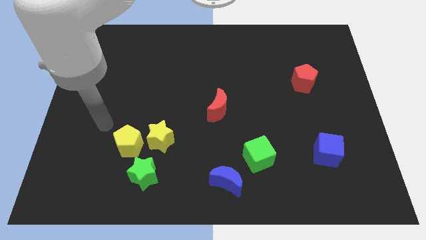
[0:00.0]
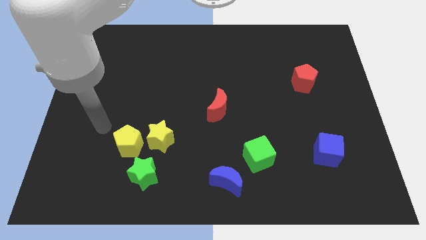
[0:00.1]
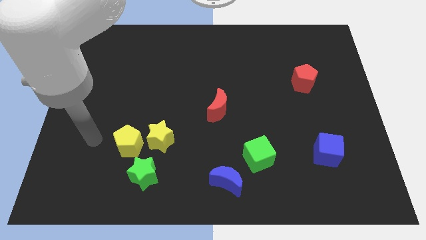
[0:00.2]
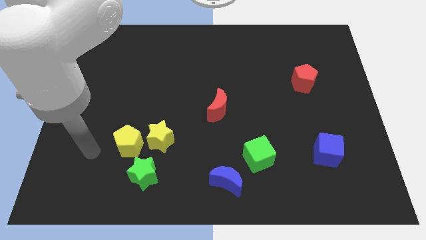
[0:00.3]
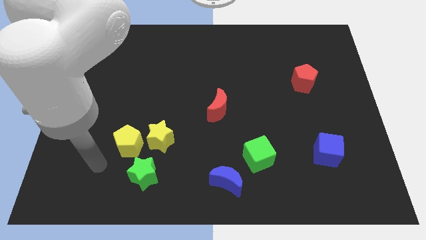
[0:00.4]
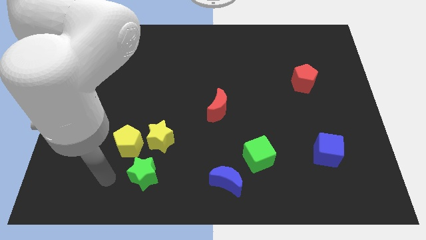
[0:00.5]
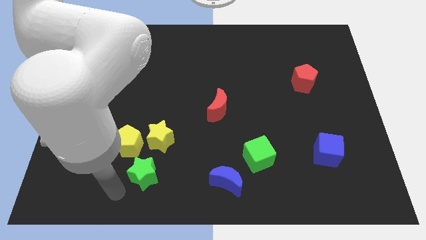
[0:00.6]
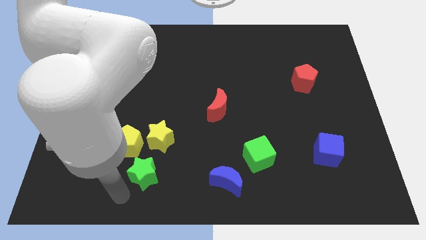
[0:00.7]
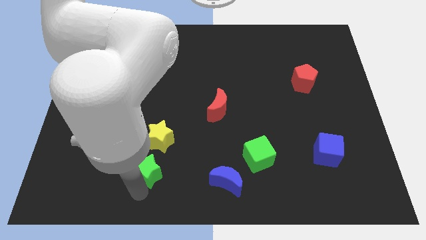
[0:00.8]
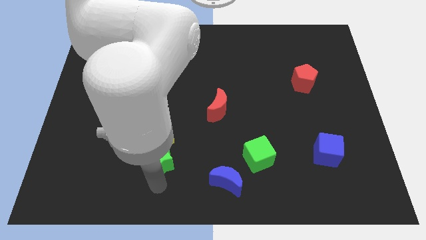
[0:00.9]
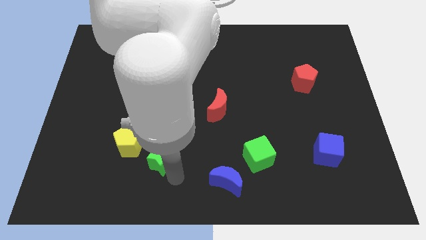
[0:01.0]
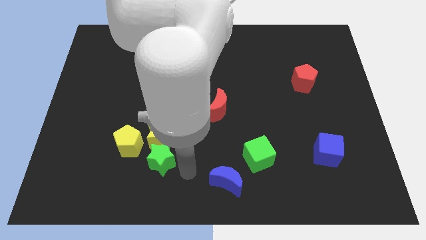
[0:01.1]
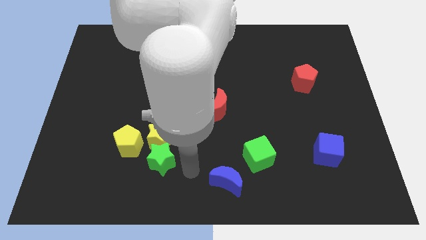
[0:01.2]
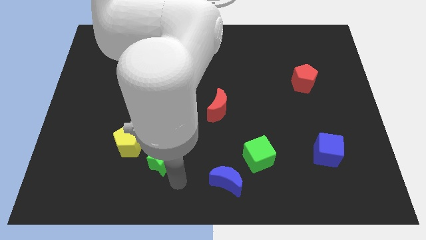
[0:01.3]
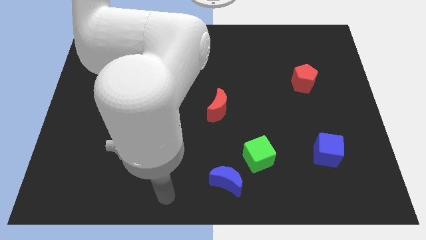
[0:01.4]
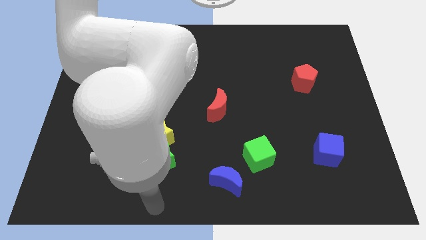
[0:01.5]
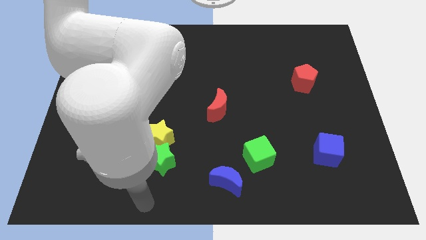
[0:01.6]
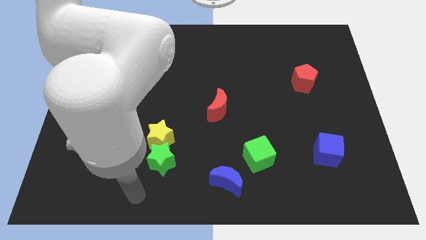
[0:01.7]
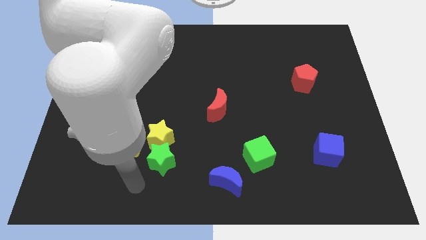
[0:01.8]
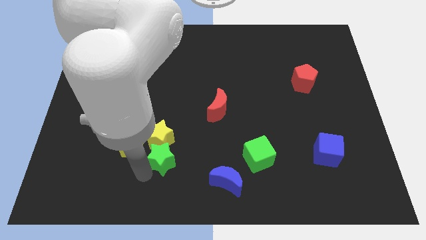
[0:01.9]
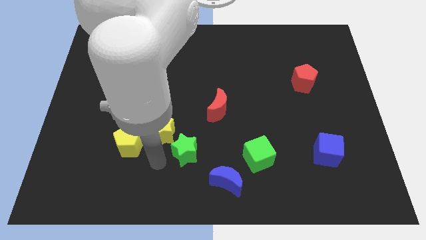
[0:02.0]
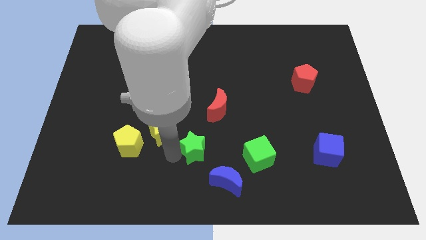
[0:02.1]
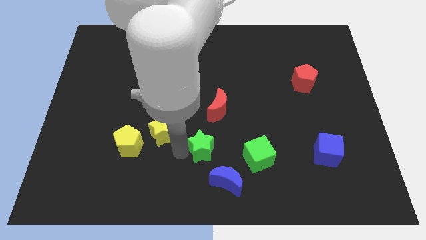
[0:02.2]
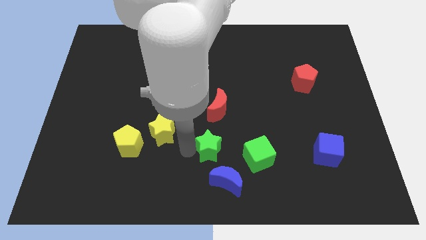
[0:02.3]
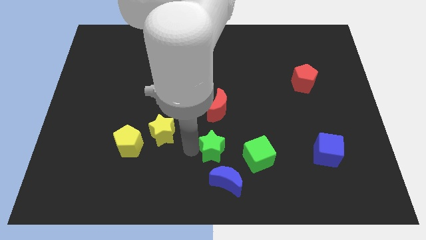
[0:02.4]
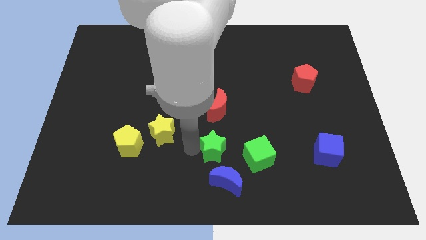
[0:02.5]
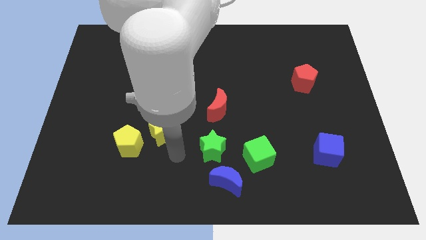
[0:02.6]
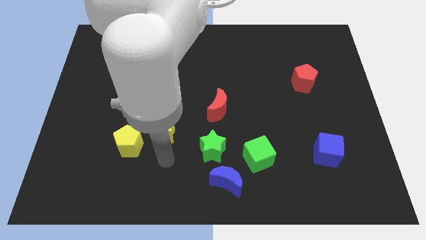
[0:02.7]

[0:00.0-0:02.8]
move green star towards green cube

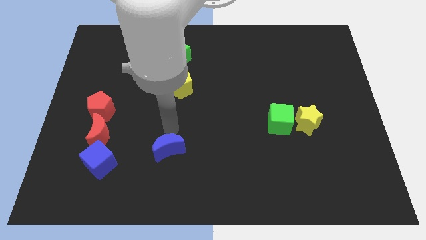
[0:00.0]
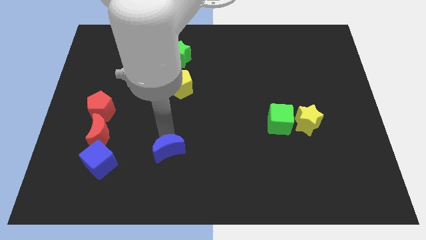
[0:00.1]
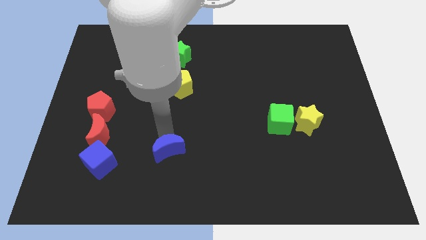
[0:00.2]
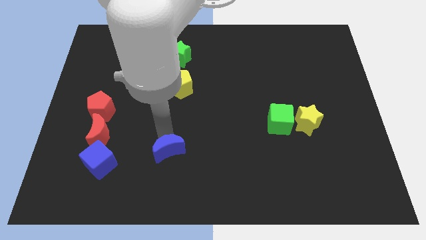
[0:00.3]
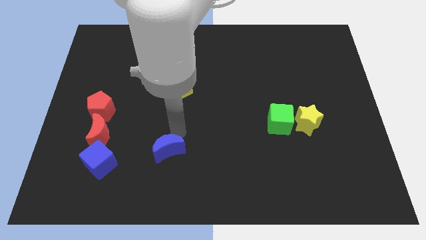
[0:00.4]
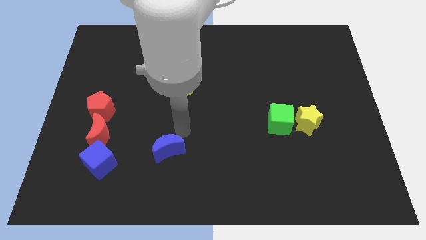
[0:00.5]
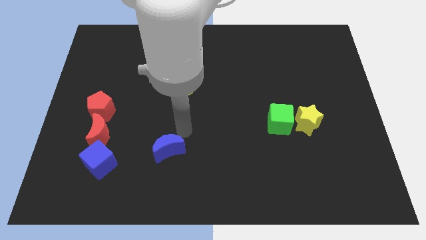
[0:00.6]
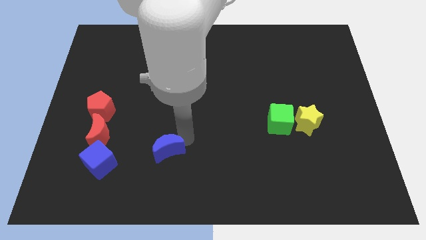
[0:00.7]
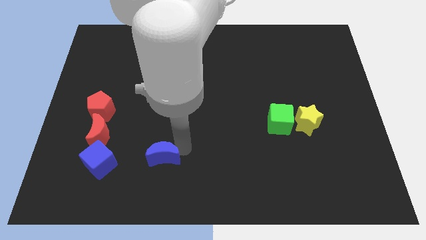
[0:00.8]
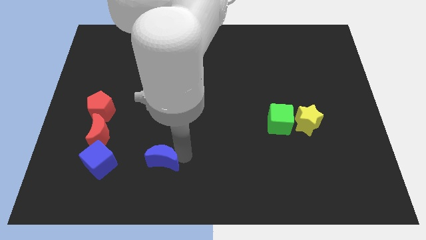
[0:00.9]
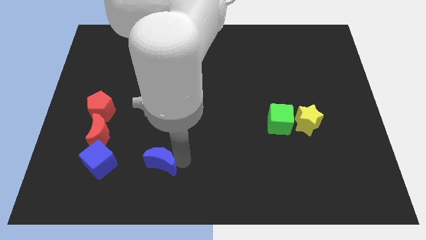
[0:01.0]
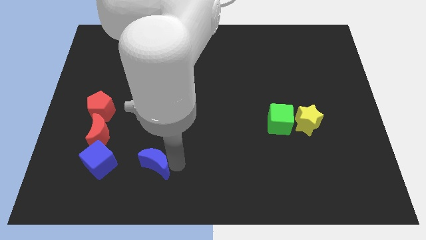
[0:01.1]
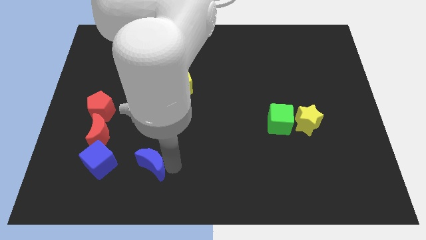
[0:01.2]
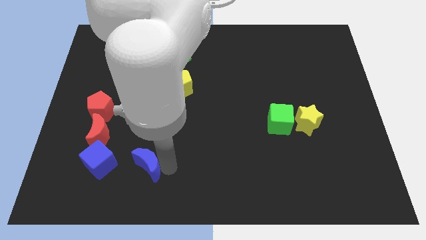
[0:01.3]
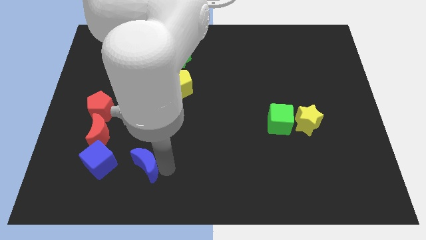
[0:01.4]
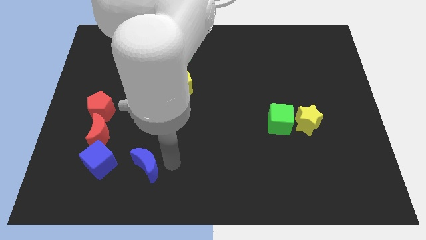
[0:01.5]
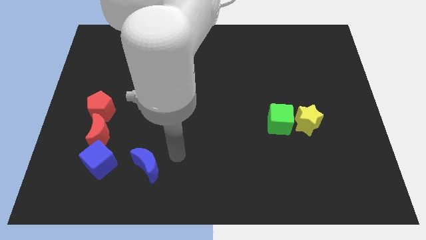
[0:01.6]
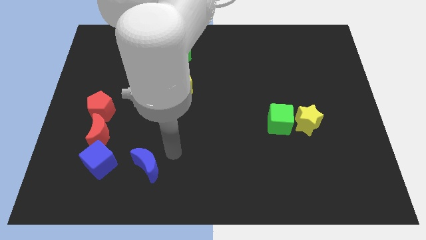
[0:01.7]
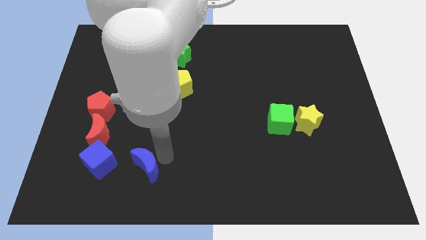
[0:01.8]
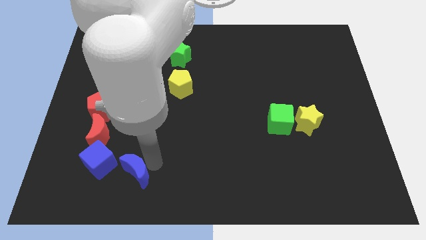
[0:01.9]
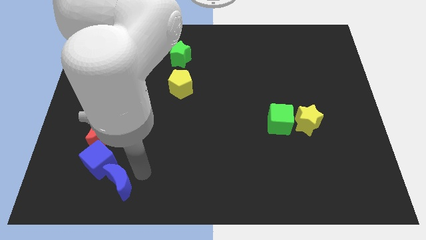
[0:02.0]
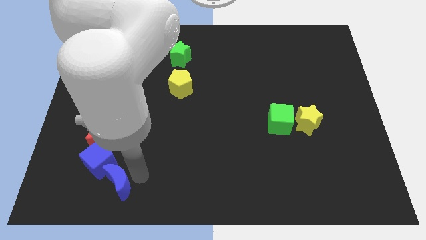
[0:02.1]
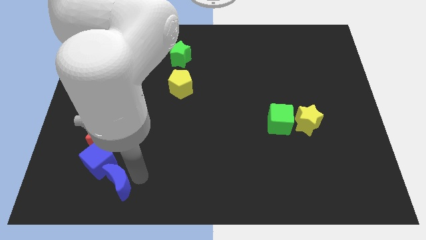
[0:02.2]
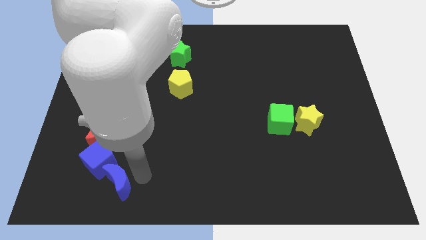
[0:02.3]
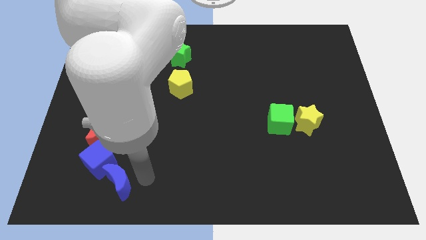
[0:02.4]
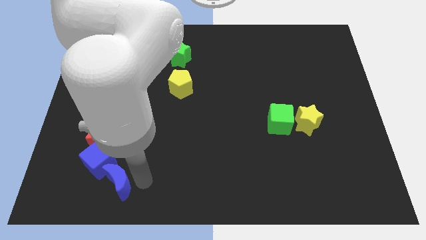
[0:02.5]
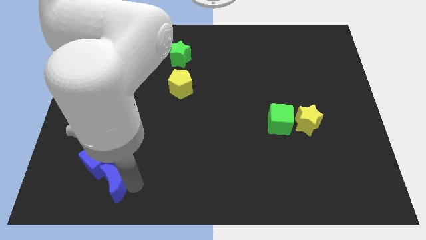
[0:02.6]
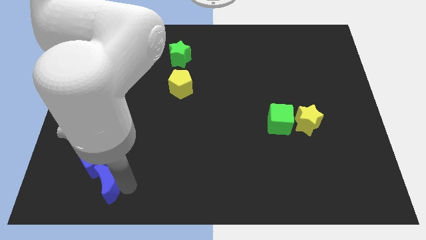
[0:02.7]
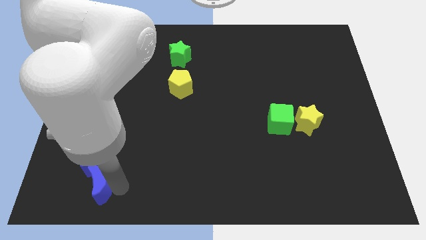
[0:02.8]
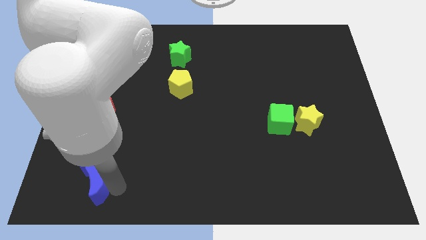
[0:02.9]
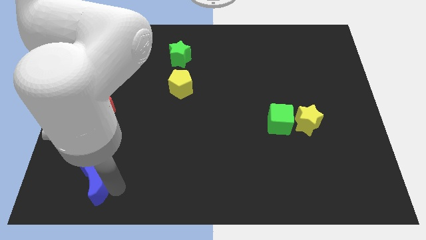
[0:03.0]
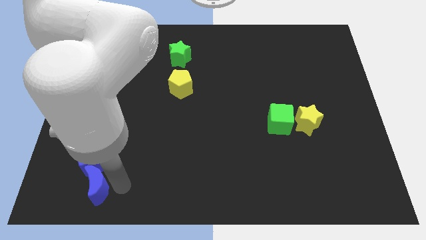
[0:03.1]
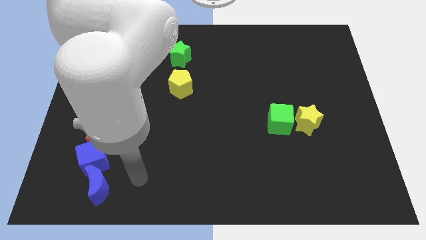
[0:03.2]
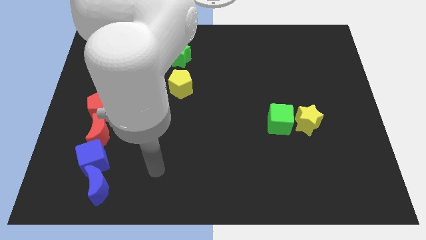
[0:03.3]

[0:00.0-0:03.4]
push the blue crescent into the blue cube

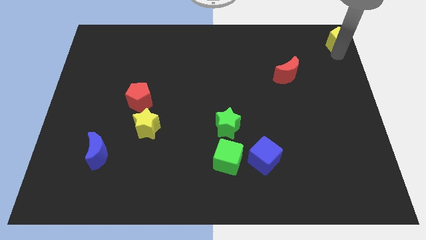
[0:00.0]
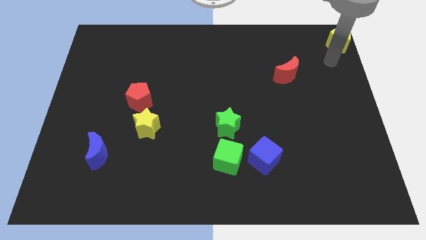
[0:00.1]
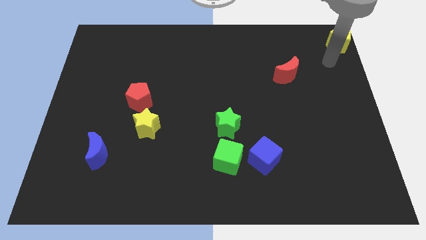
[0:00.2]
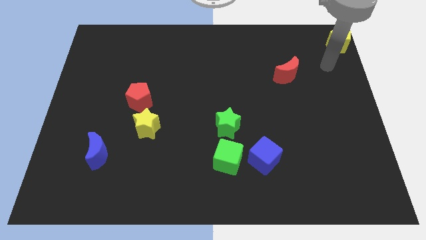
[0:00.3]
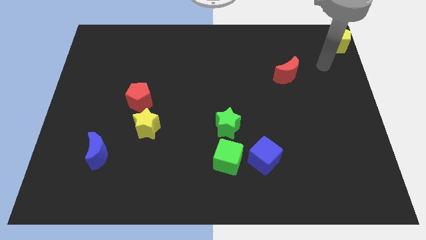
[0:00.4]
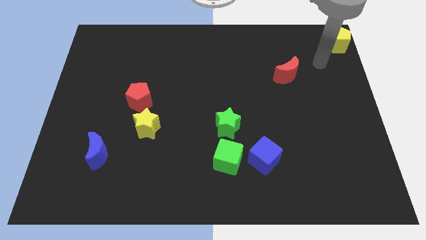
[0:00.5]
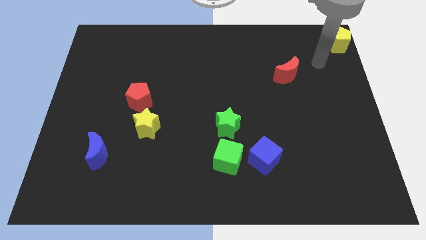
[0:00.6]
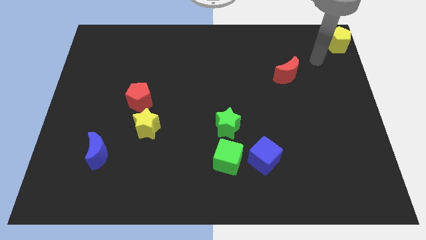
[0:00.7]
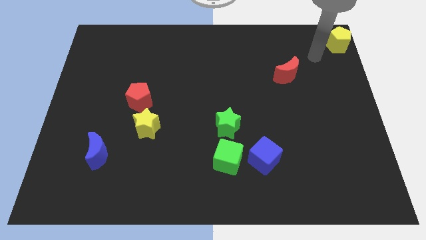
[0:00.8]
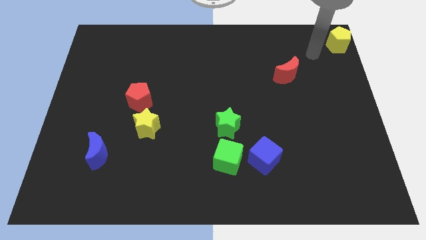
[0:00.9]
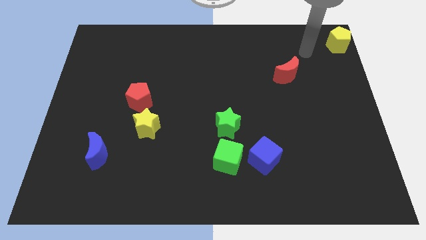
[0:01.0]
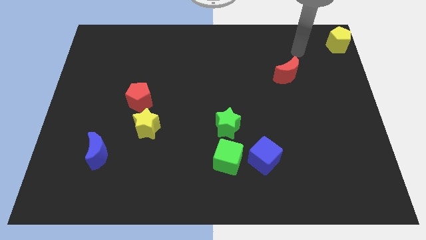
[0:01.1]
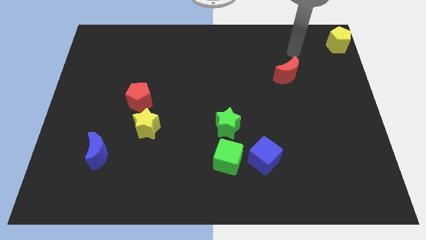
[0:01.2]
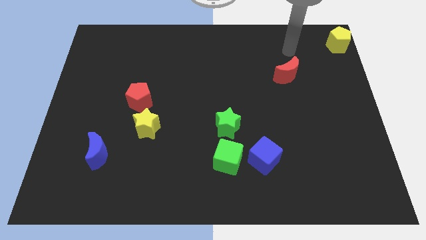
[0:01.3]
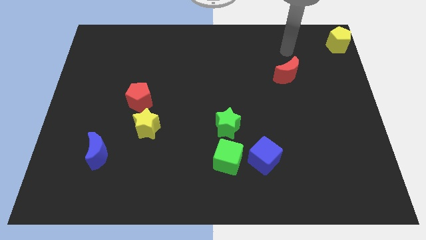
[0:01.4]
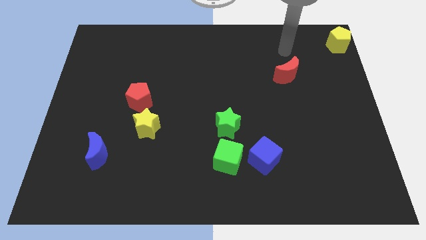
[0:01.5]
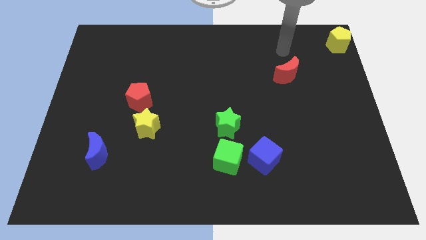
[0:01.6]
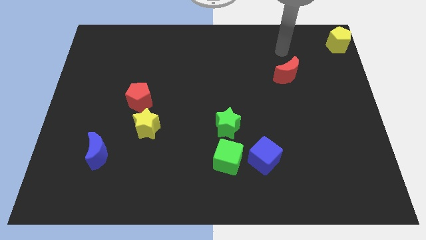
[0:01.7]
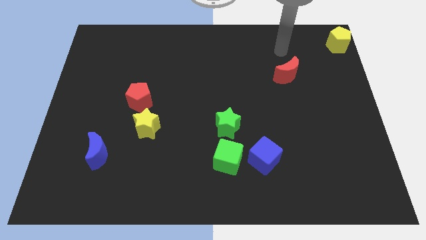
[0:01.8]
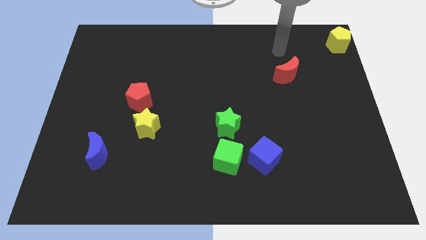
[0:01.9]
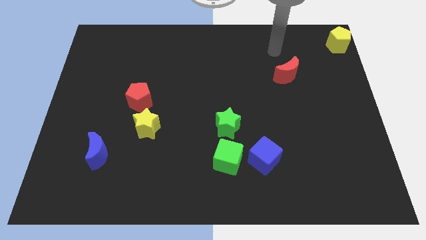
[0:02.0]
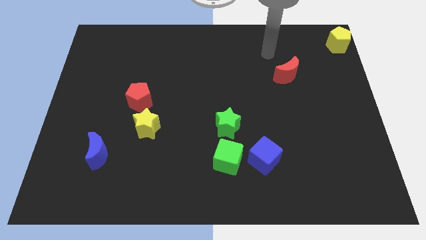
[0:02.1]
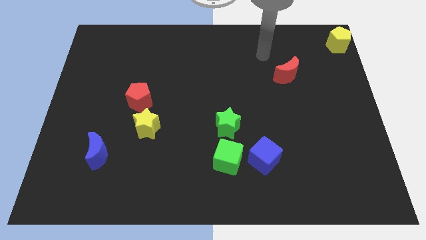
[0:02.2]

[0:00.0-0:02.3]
move away from yellow pentagon

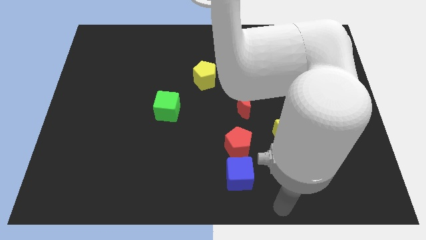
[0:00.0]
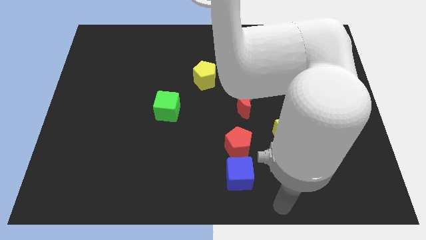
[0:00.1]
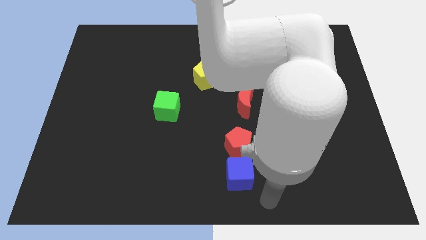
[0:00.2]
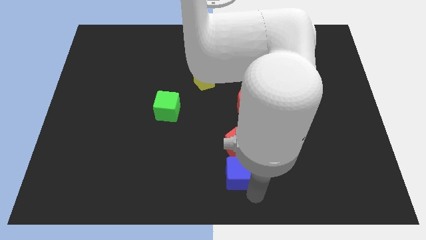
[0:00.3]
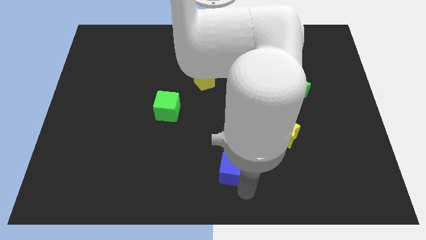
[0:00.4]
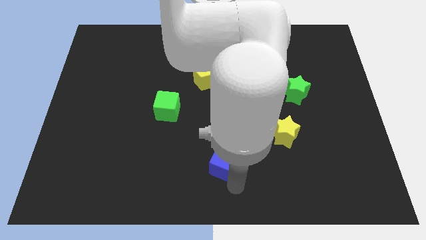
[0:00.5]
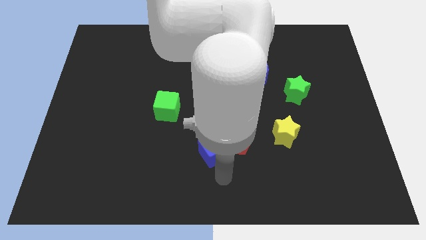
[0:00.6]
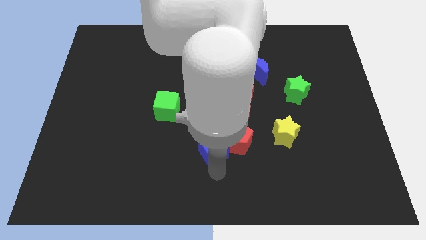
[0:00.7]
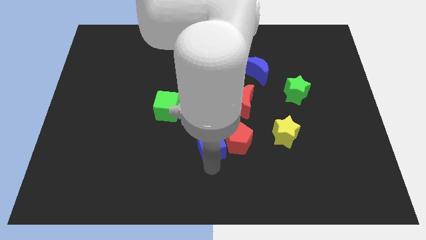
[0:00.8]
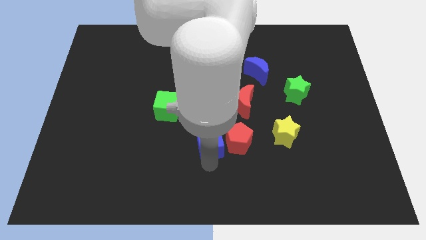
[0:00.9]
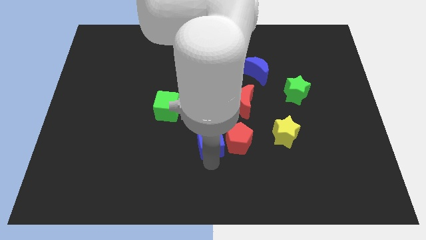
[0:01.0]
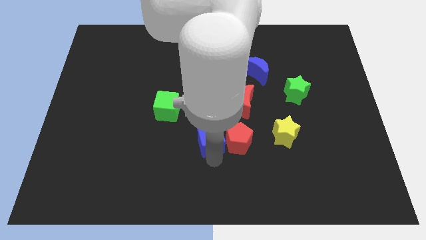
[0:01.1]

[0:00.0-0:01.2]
move the blue cube to the bottom left side of the red pentagon
